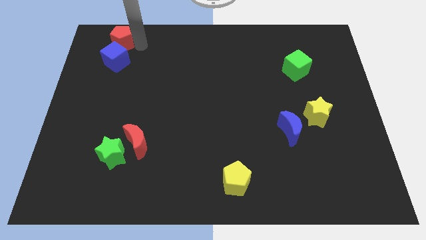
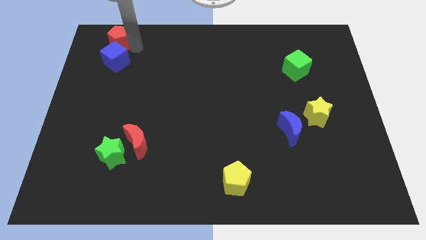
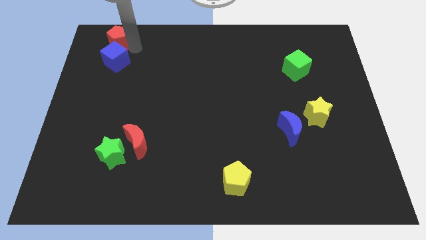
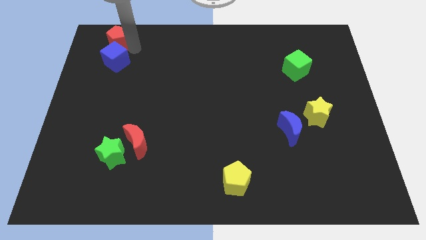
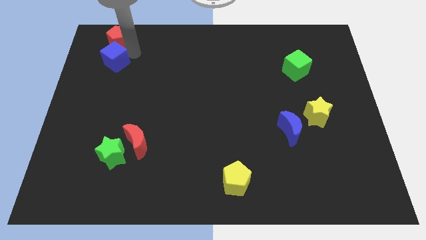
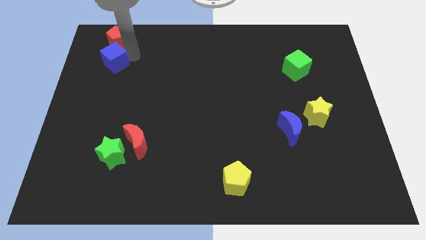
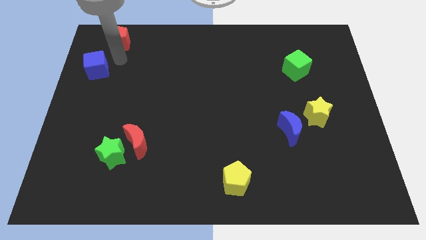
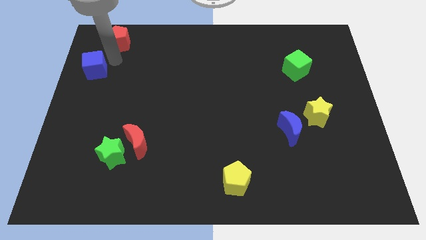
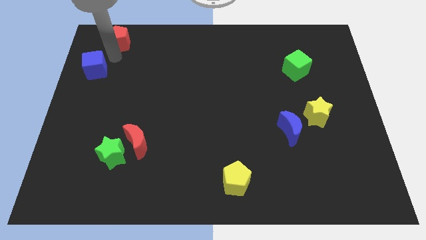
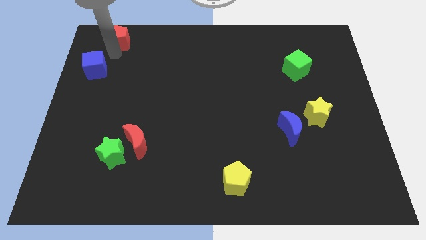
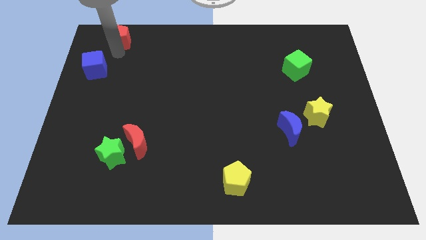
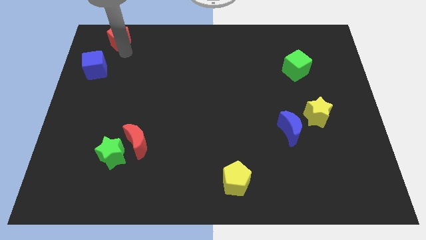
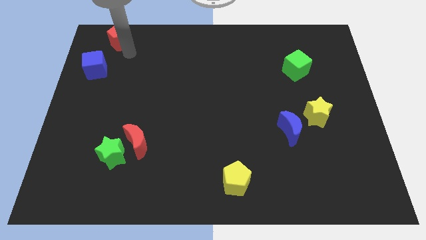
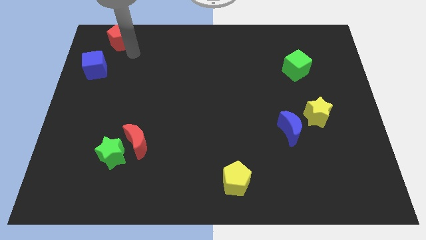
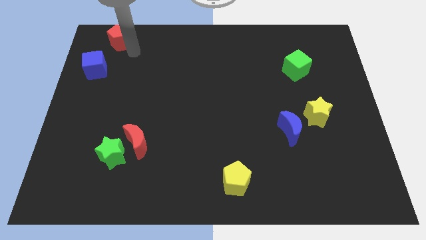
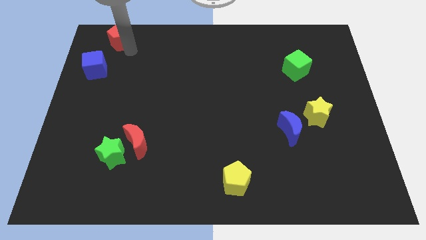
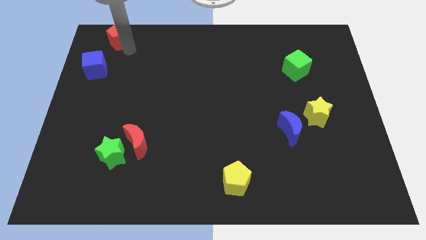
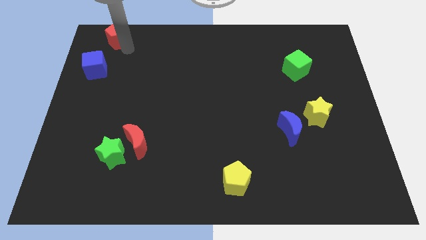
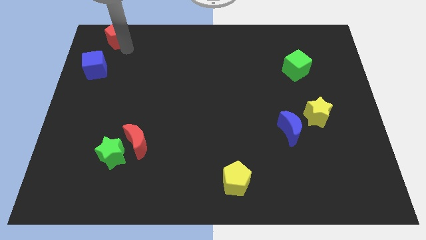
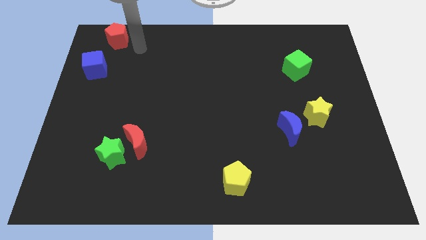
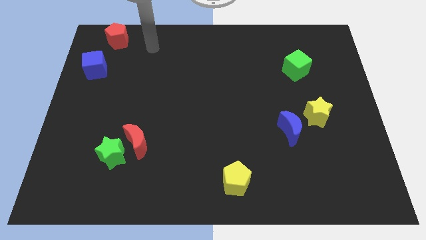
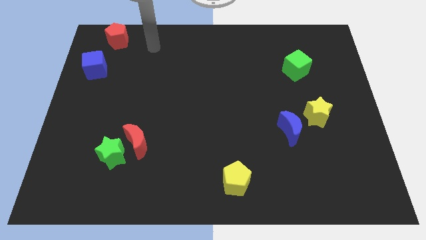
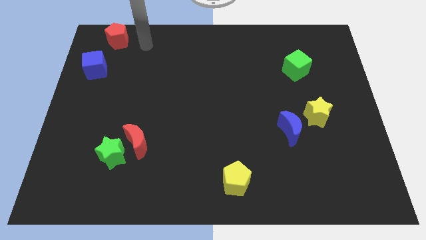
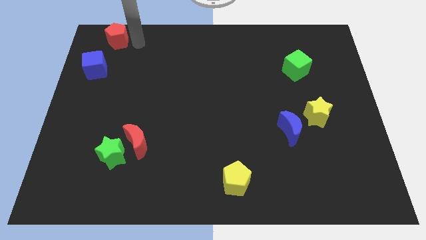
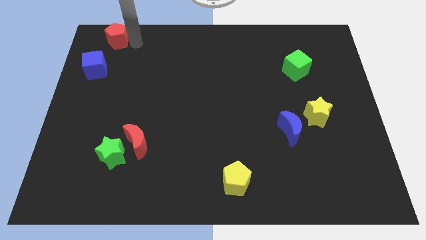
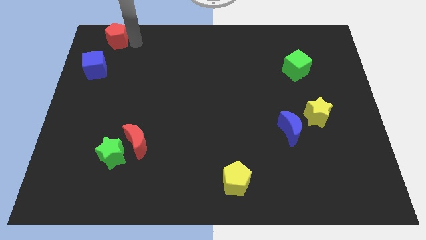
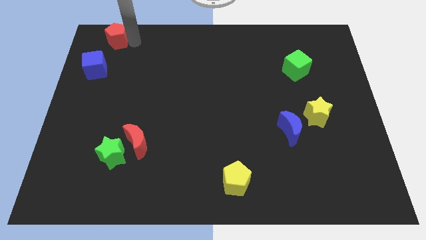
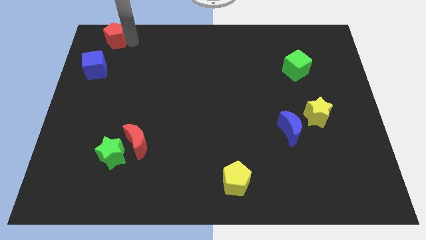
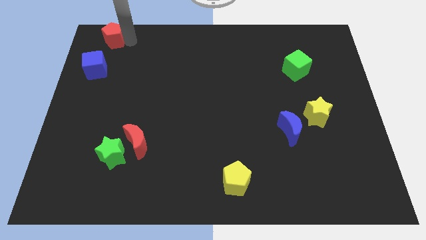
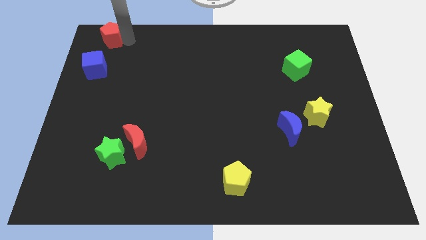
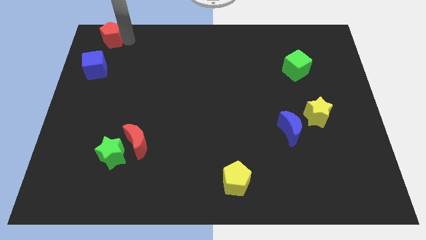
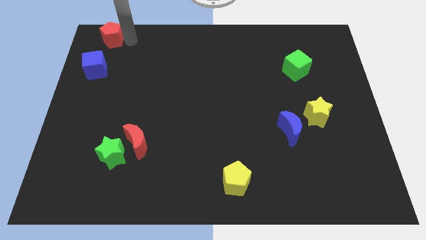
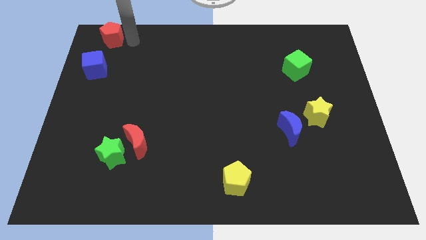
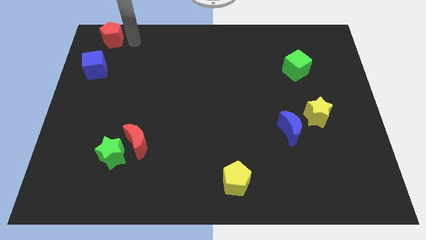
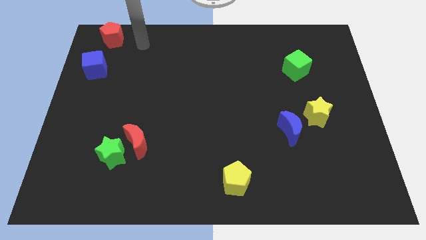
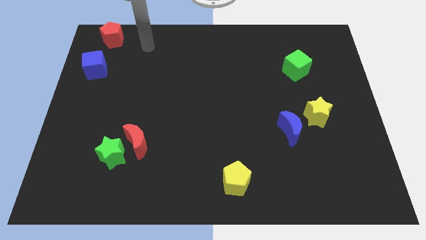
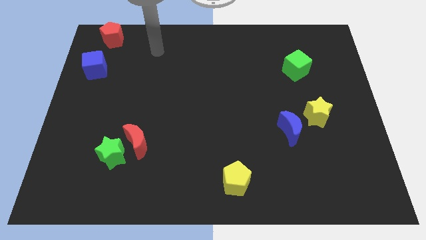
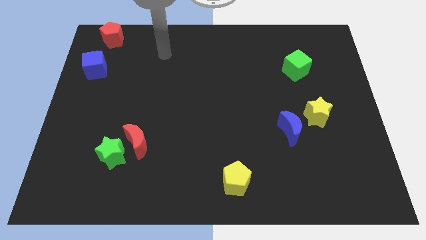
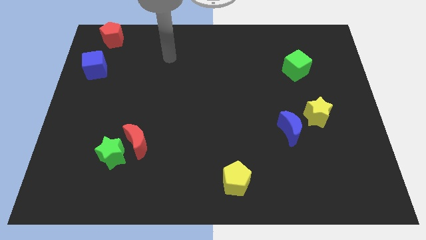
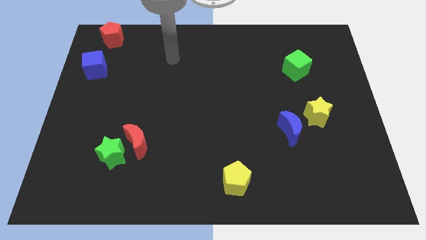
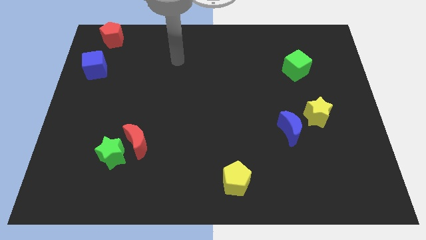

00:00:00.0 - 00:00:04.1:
separate blue cube and red pentagon

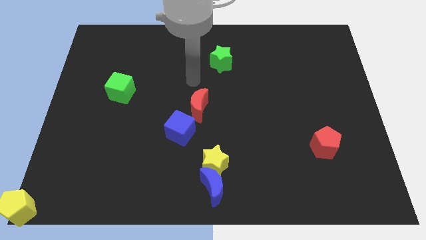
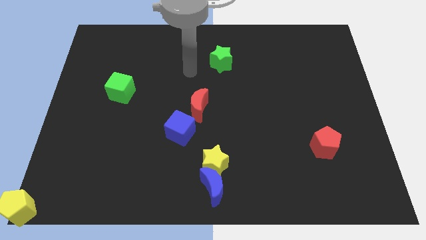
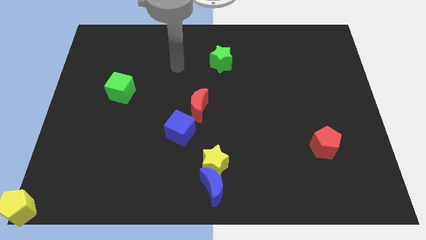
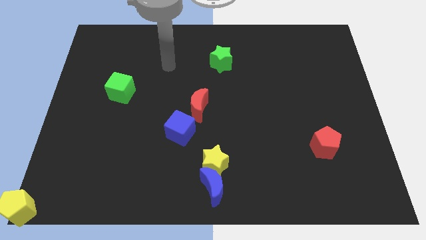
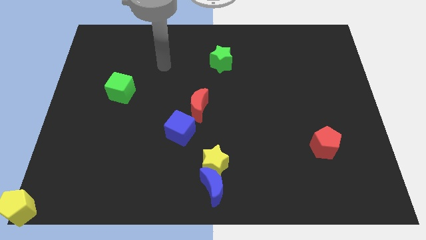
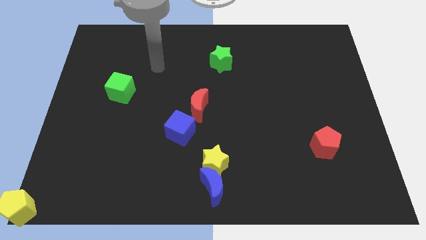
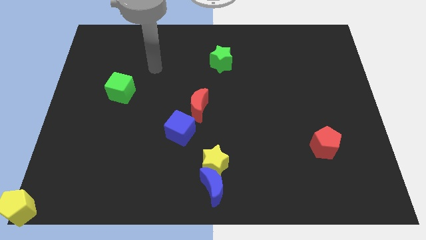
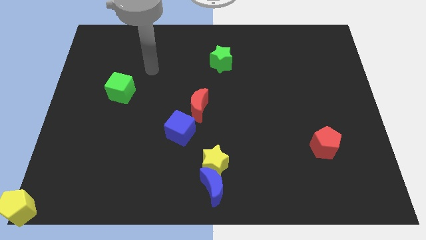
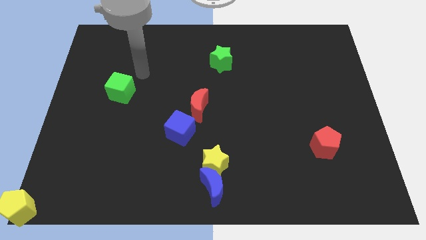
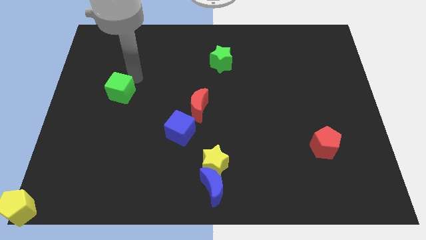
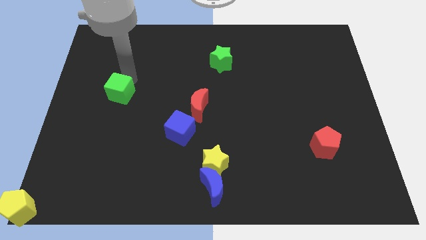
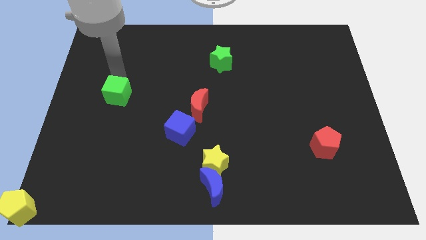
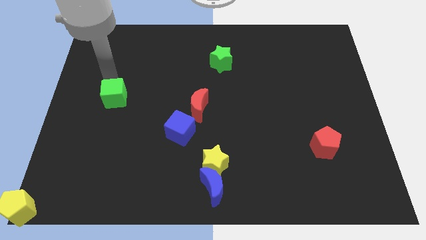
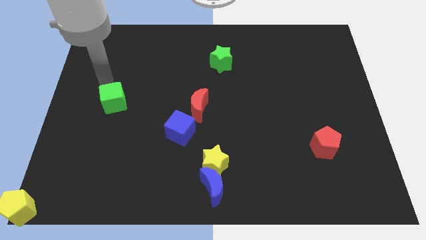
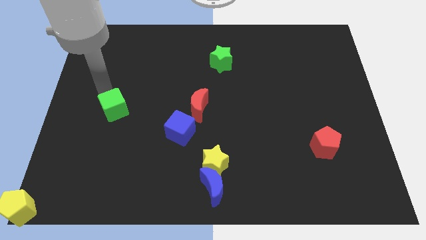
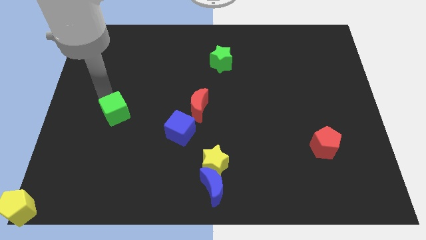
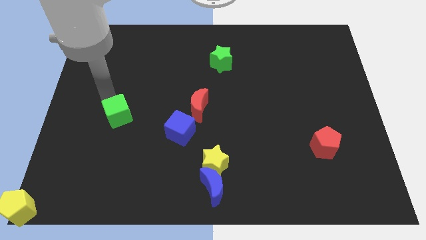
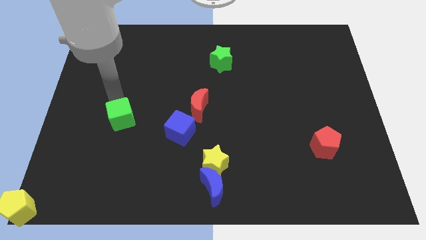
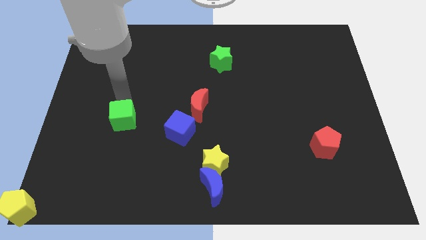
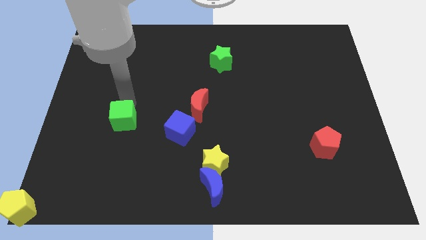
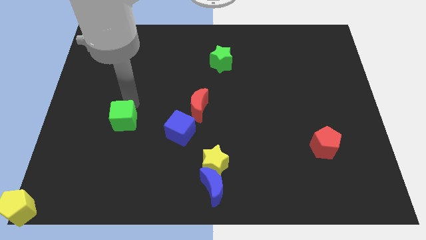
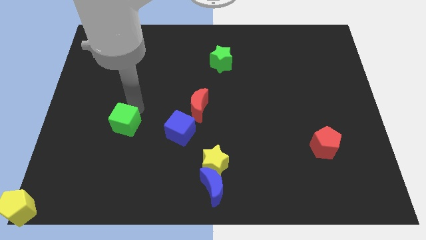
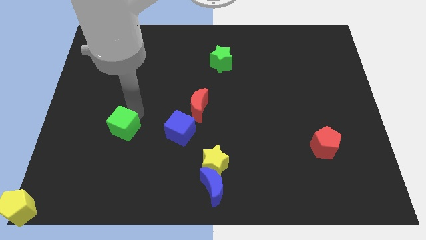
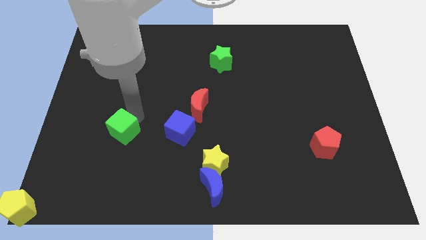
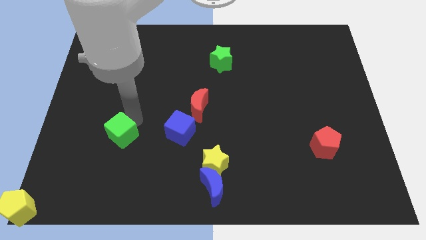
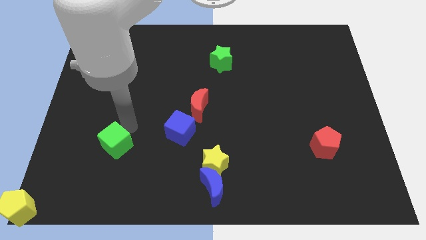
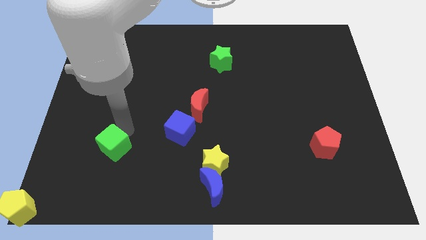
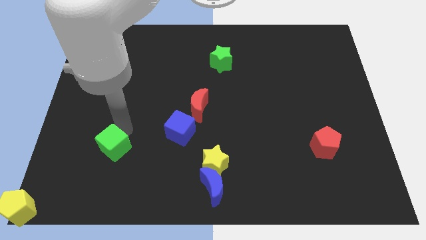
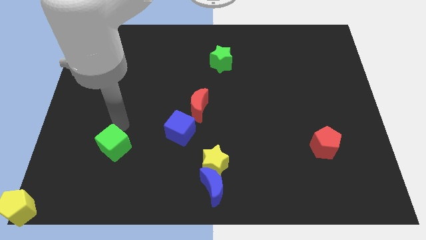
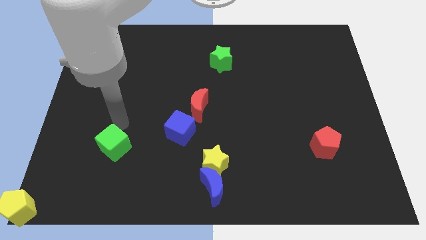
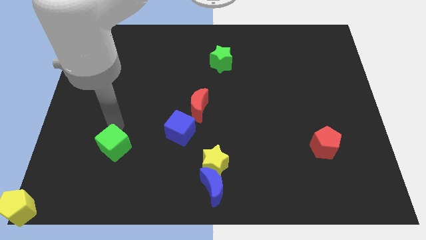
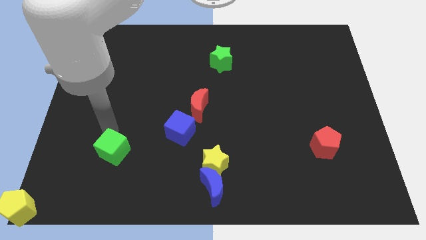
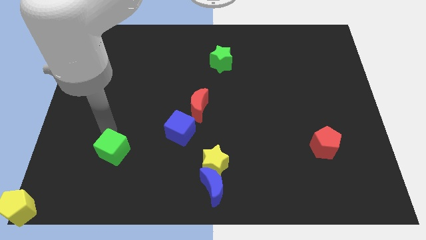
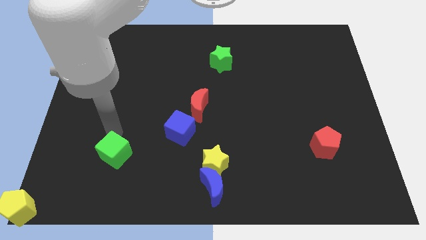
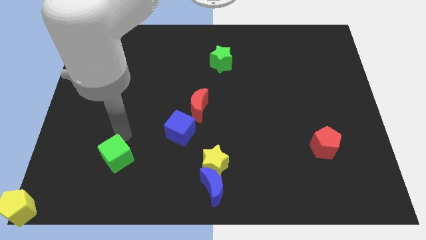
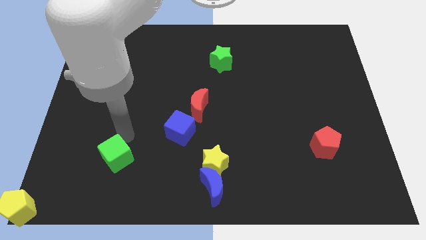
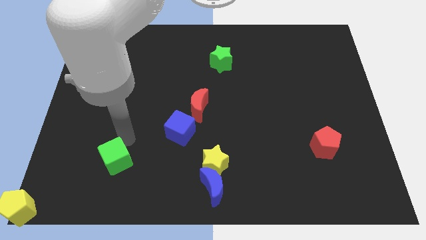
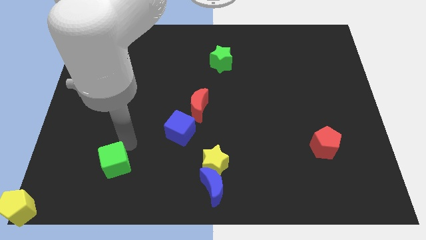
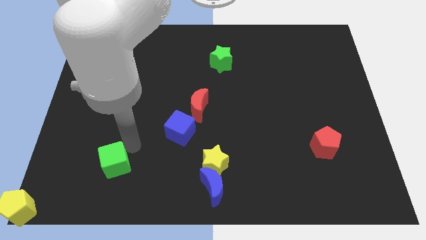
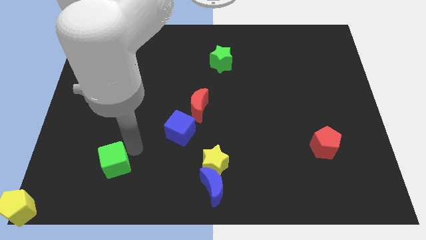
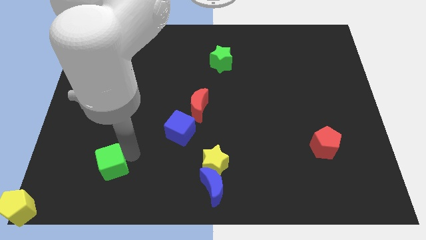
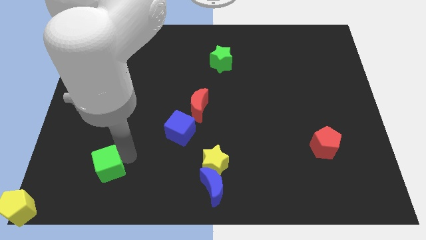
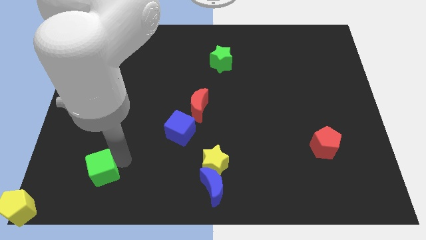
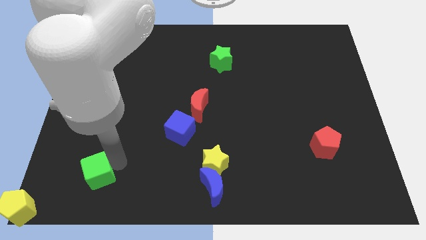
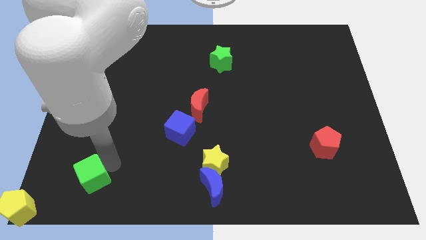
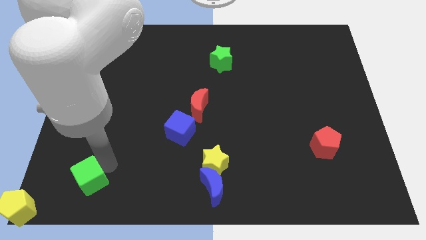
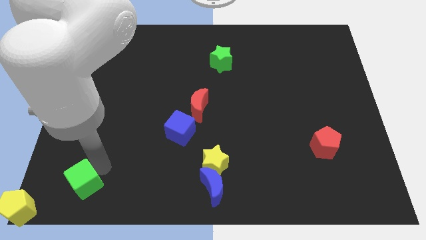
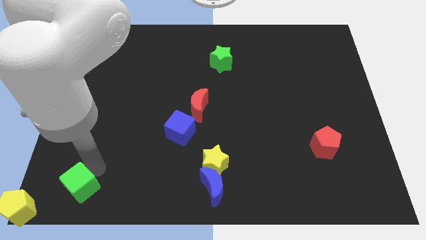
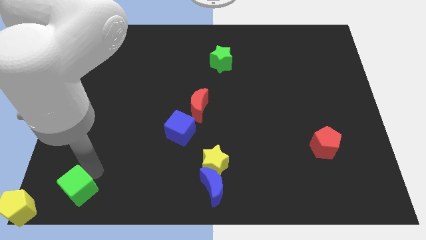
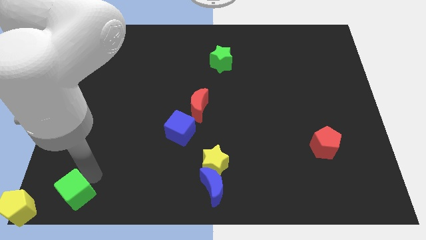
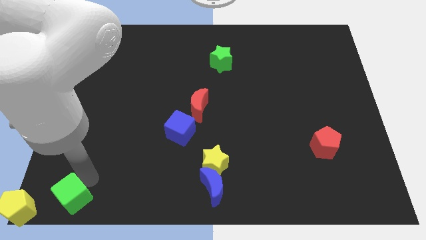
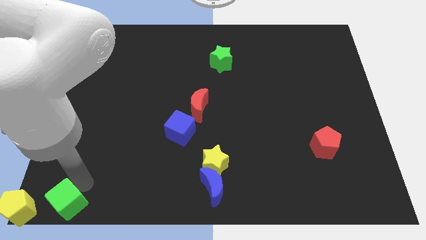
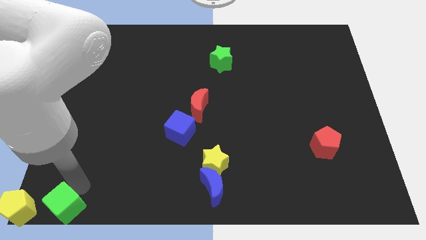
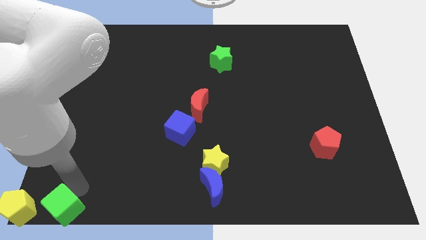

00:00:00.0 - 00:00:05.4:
put the green cube to the right of the yellow pentagon
